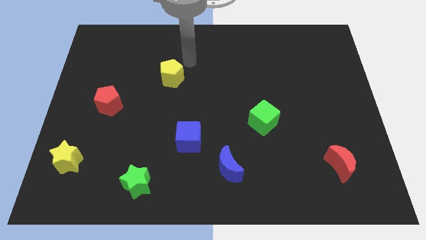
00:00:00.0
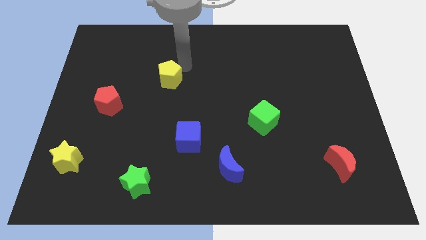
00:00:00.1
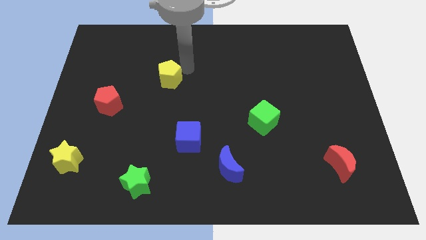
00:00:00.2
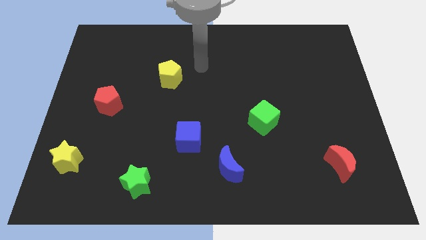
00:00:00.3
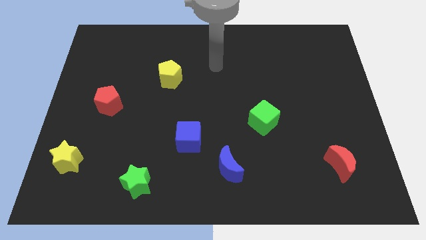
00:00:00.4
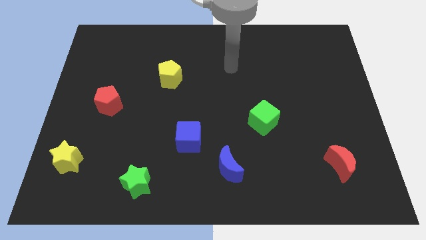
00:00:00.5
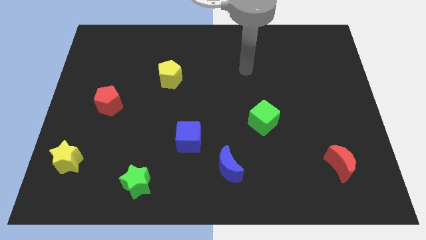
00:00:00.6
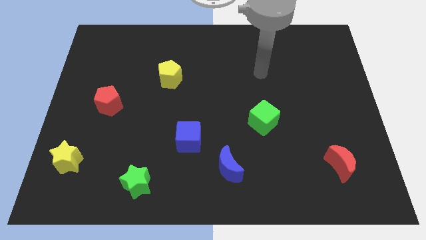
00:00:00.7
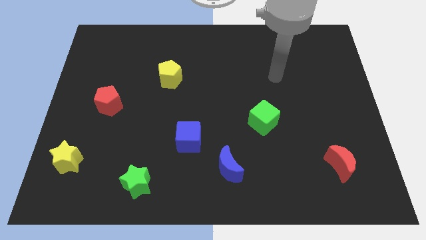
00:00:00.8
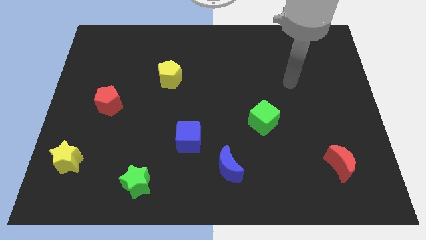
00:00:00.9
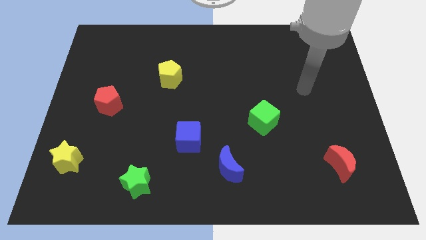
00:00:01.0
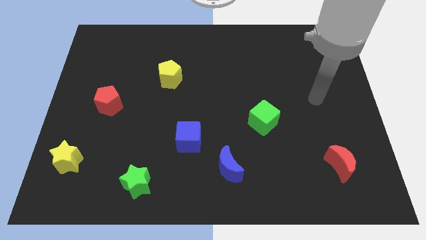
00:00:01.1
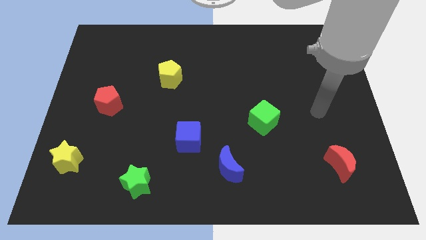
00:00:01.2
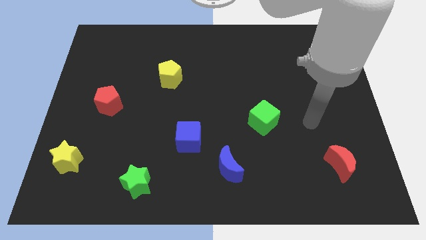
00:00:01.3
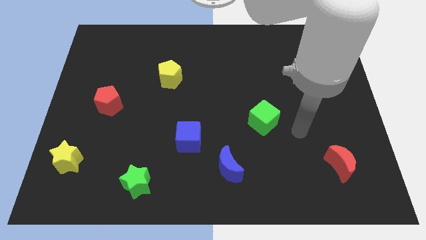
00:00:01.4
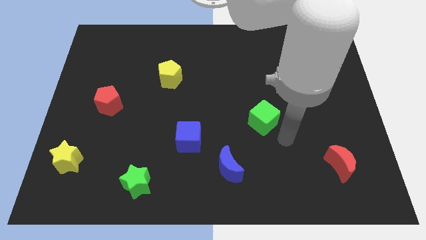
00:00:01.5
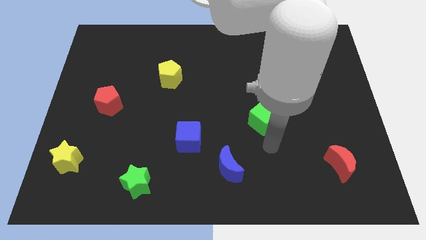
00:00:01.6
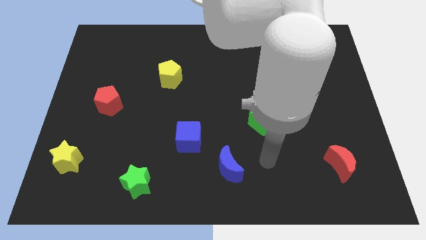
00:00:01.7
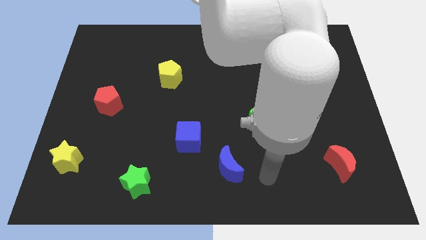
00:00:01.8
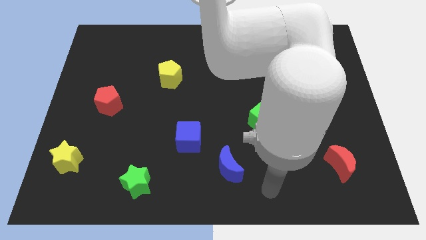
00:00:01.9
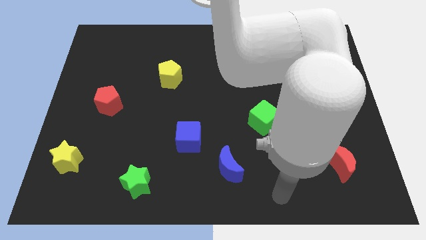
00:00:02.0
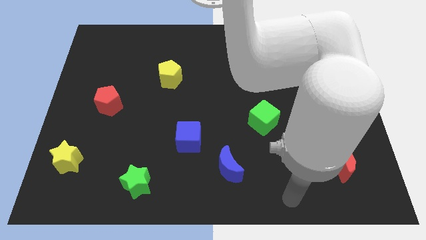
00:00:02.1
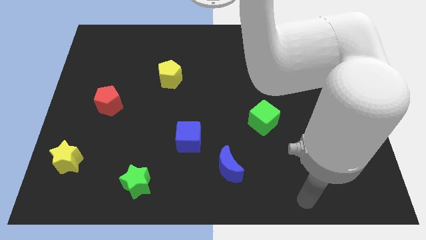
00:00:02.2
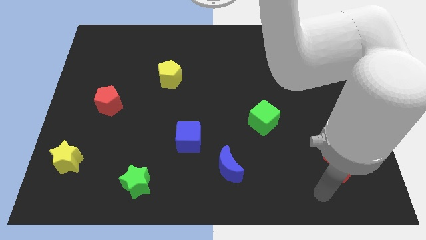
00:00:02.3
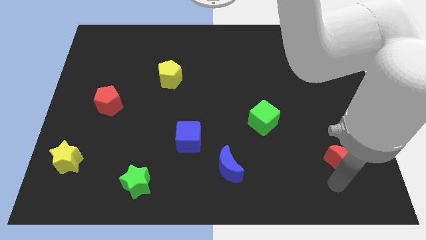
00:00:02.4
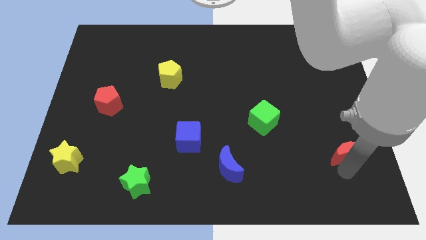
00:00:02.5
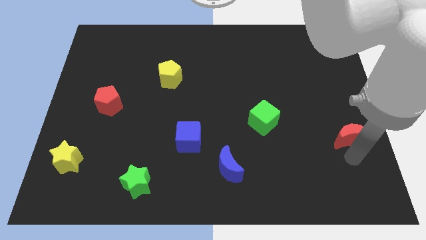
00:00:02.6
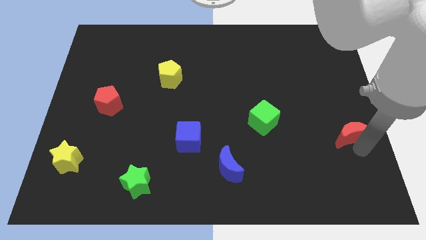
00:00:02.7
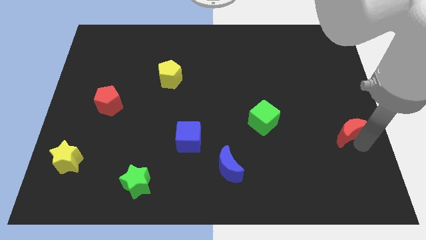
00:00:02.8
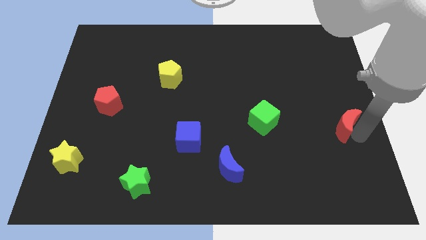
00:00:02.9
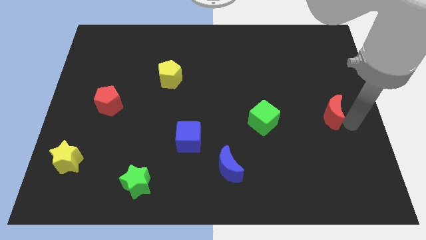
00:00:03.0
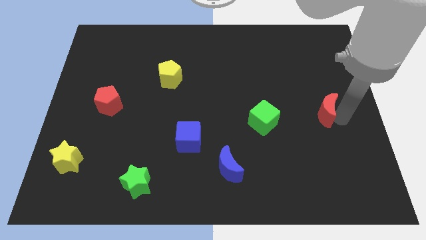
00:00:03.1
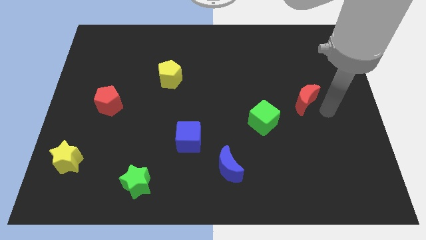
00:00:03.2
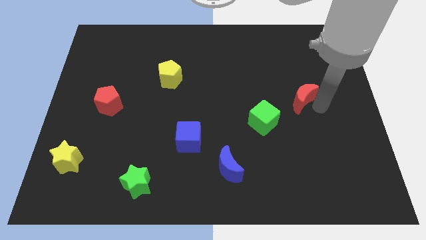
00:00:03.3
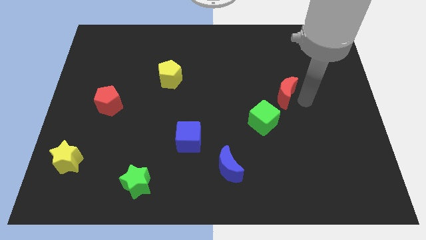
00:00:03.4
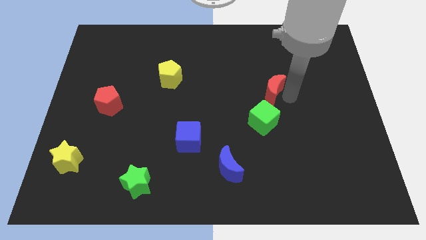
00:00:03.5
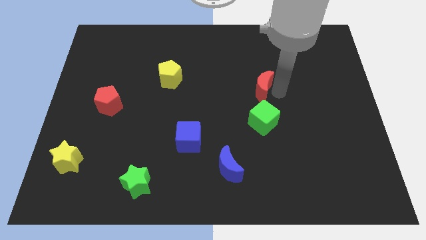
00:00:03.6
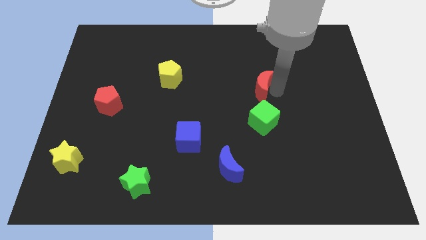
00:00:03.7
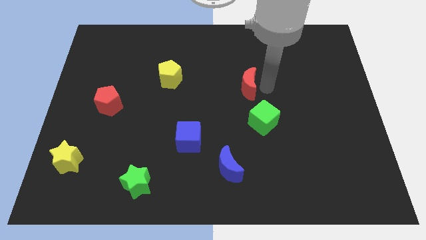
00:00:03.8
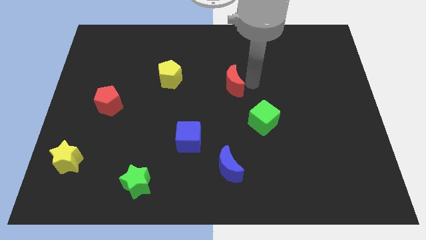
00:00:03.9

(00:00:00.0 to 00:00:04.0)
place the red moon on the top left of the green cube

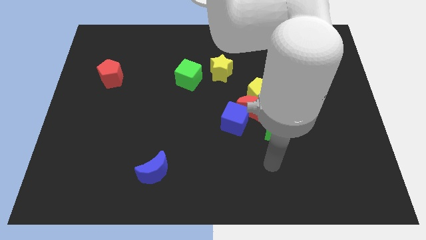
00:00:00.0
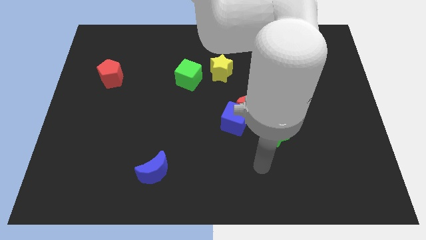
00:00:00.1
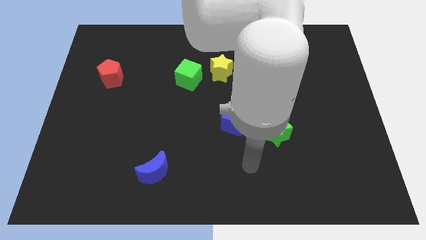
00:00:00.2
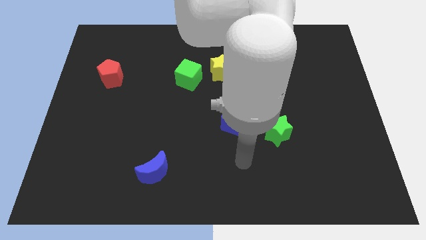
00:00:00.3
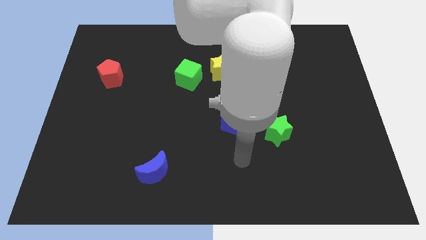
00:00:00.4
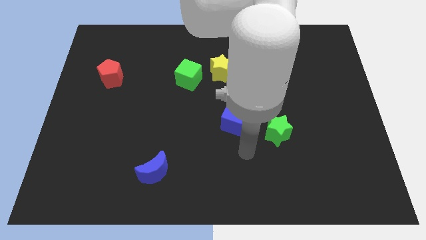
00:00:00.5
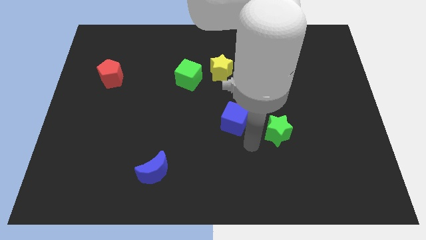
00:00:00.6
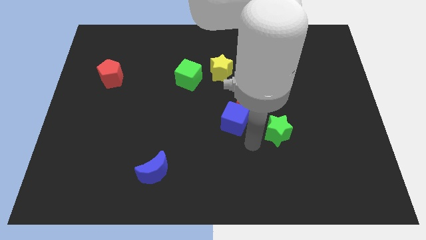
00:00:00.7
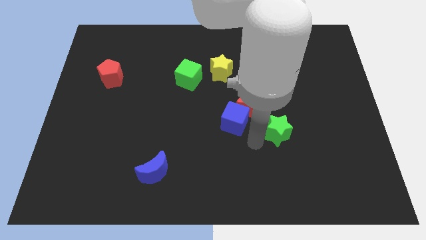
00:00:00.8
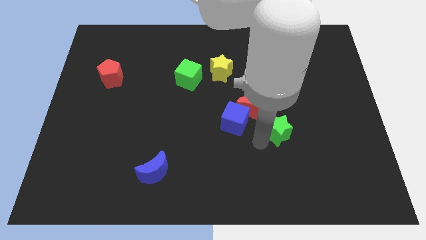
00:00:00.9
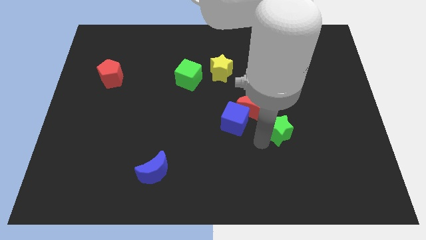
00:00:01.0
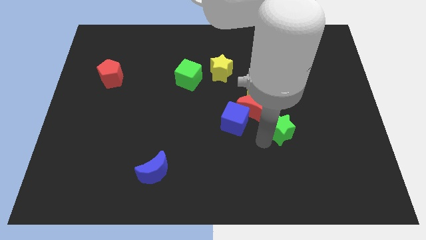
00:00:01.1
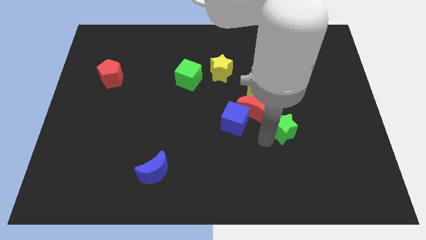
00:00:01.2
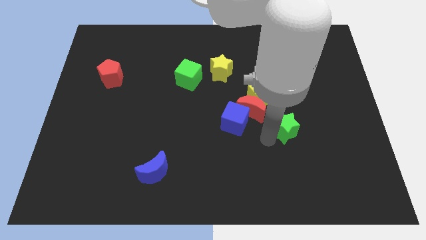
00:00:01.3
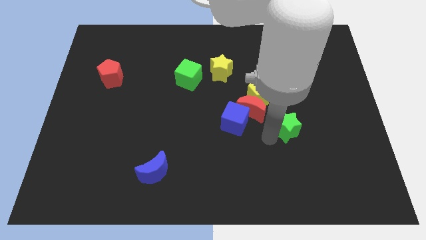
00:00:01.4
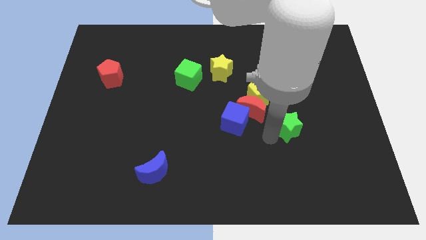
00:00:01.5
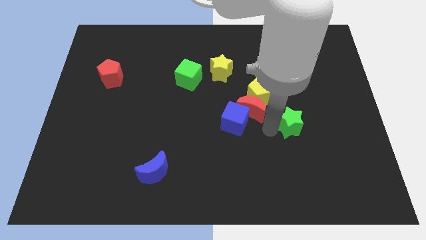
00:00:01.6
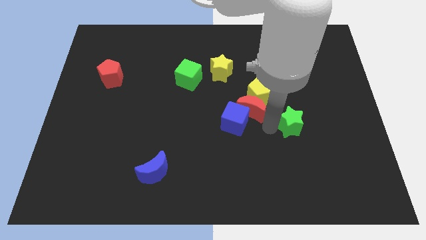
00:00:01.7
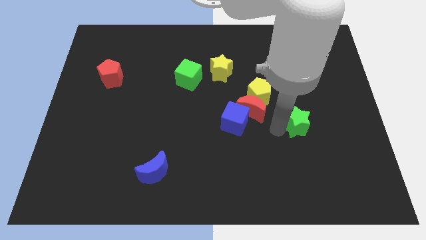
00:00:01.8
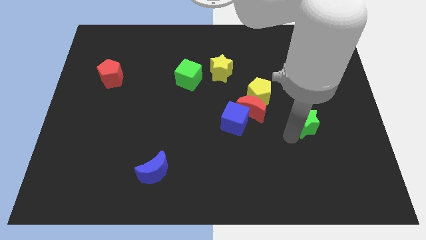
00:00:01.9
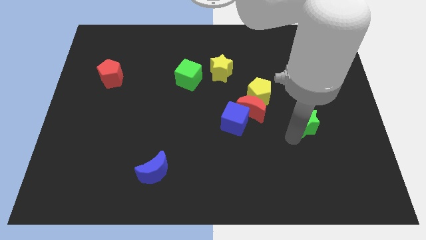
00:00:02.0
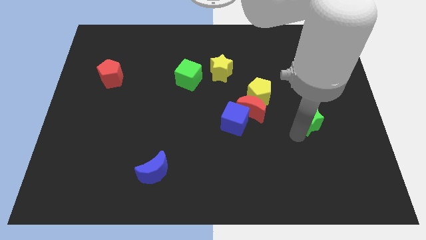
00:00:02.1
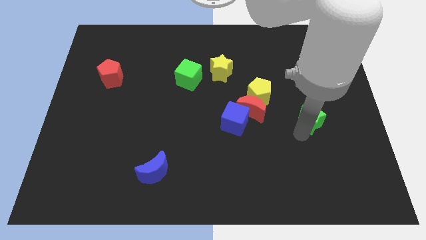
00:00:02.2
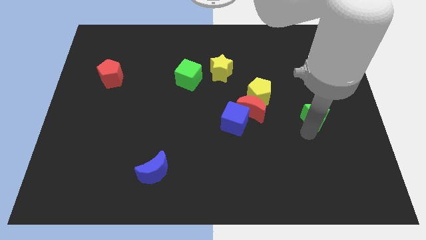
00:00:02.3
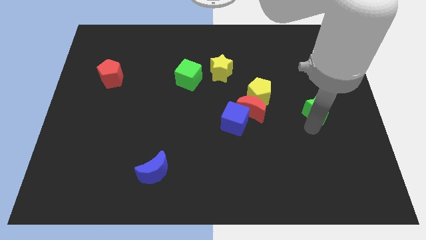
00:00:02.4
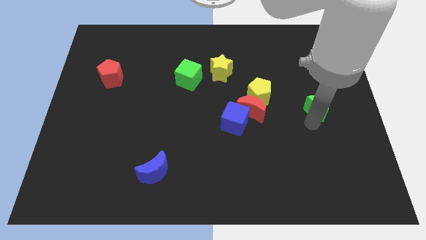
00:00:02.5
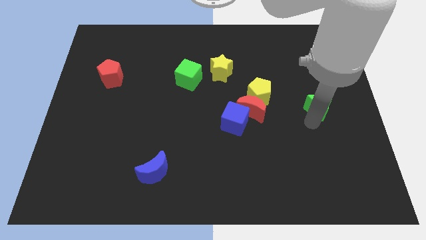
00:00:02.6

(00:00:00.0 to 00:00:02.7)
move the green star towards the center right

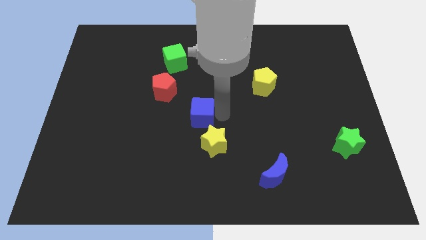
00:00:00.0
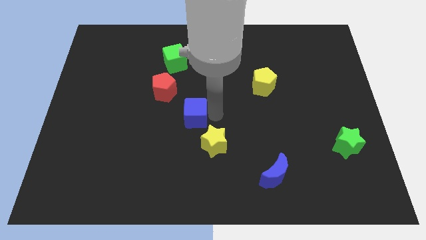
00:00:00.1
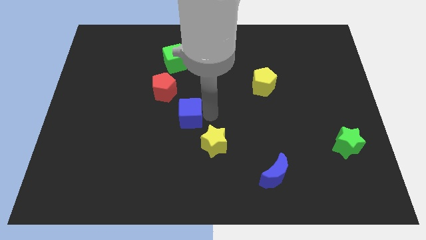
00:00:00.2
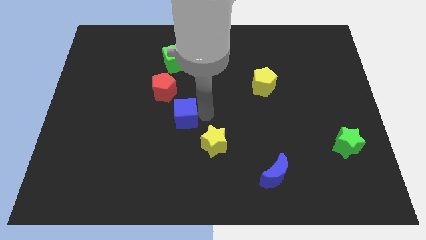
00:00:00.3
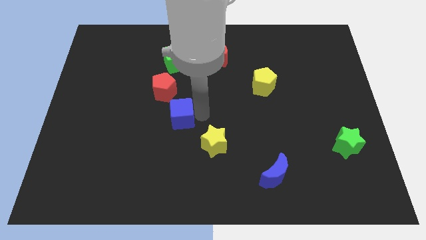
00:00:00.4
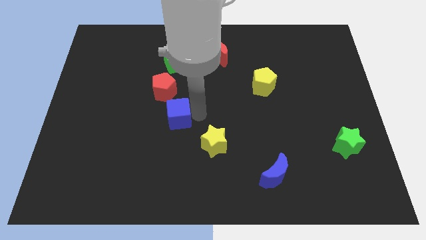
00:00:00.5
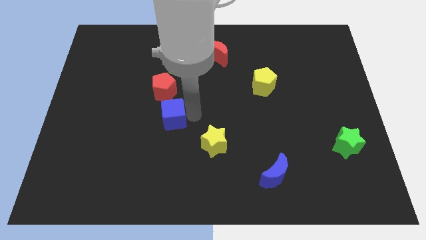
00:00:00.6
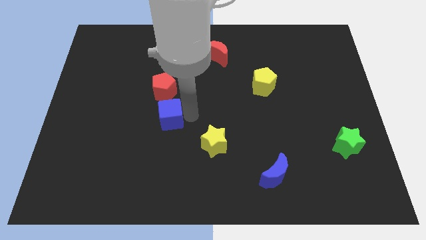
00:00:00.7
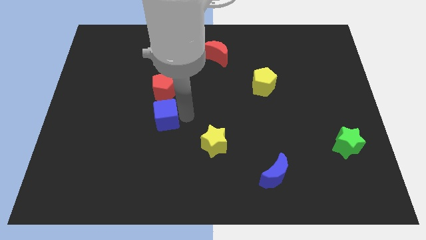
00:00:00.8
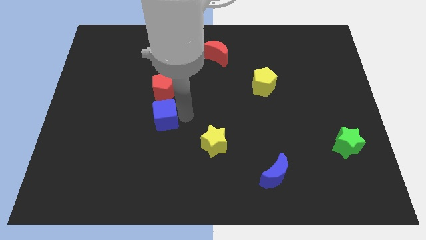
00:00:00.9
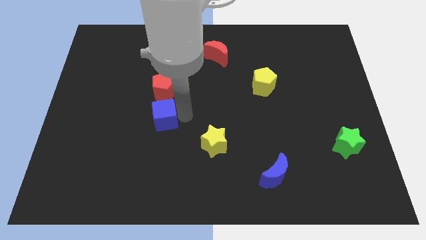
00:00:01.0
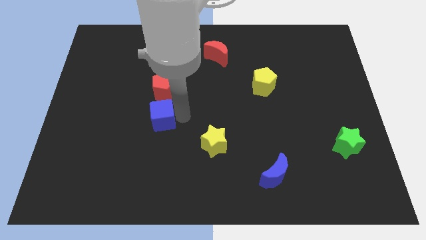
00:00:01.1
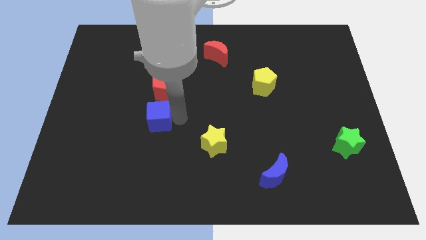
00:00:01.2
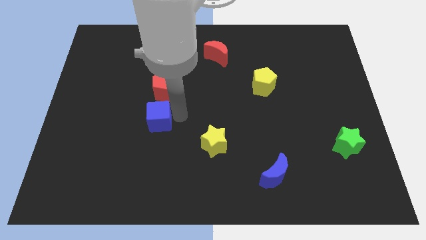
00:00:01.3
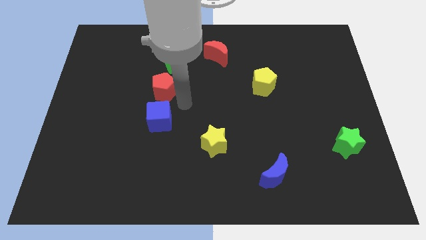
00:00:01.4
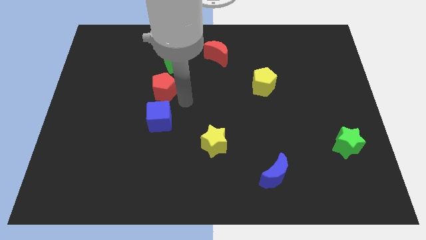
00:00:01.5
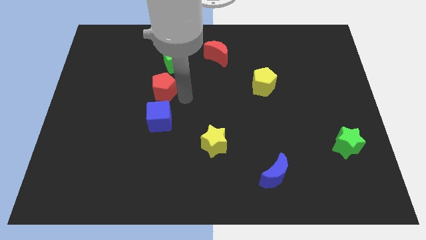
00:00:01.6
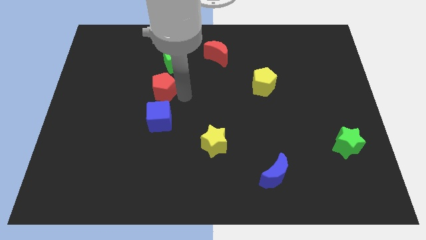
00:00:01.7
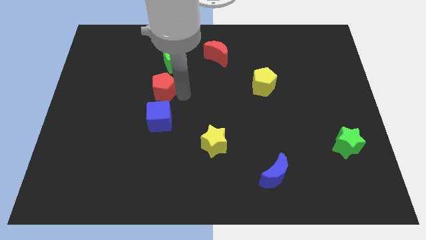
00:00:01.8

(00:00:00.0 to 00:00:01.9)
drag the blue cube towards left

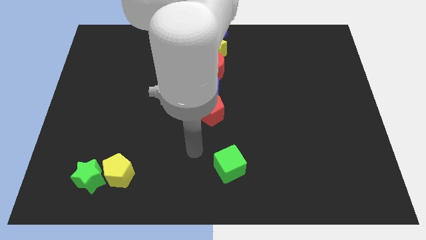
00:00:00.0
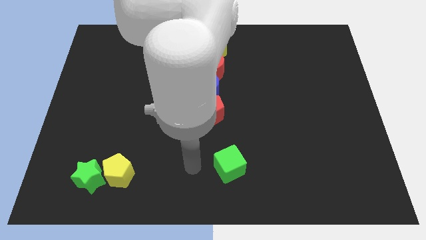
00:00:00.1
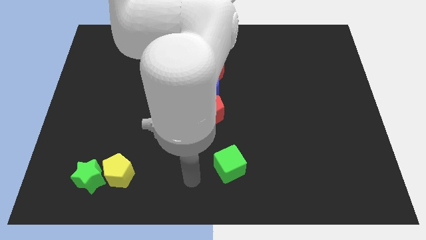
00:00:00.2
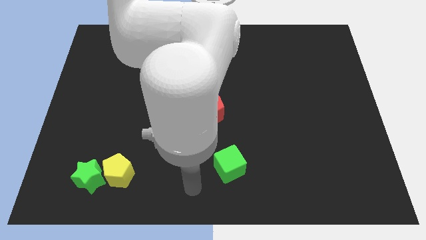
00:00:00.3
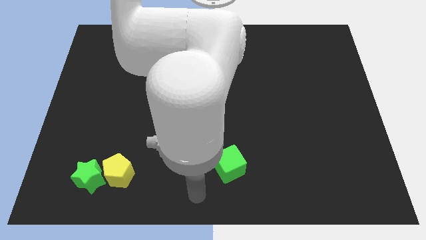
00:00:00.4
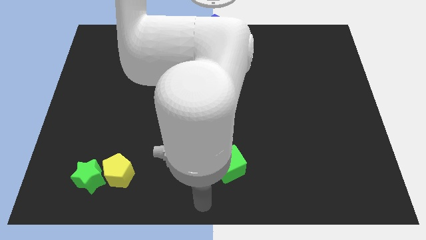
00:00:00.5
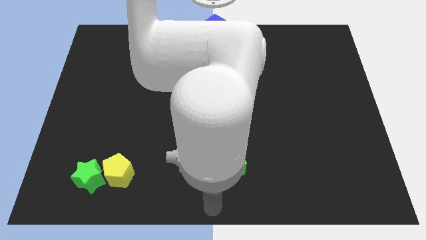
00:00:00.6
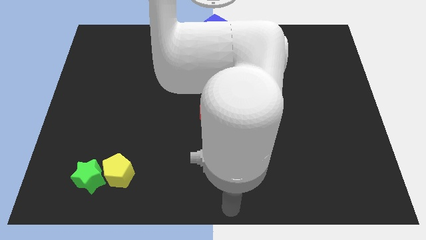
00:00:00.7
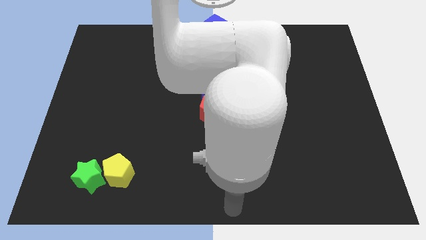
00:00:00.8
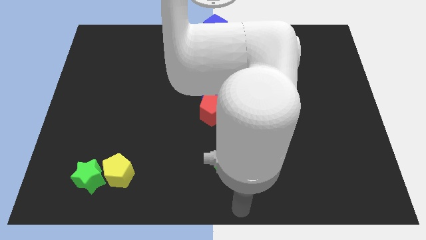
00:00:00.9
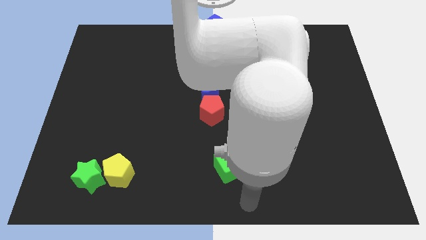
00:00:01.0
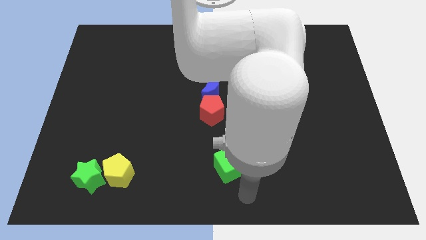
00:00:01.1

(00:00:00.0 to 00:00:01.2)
point the arm at the bottom of the green cube
